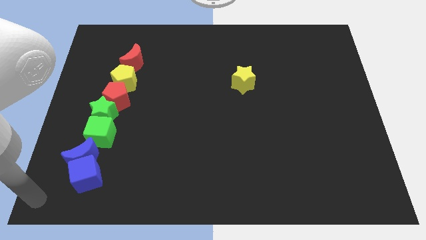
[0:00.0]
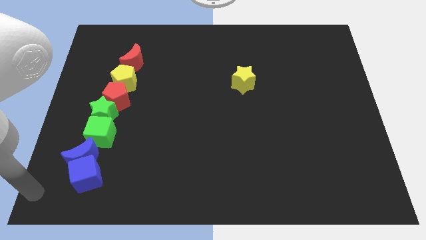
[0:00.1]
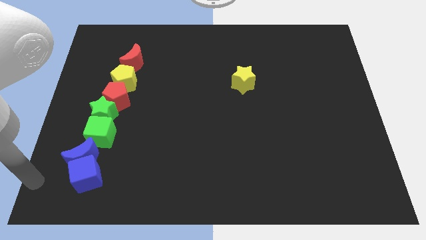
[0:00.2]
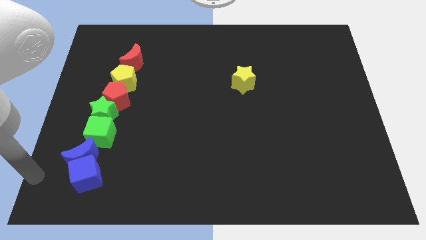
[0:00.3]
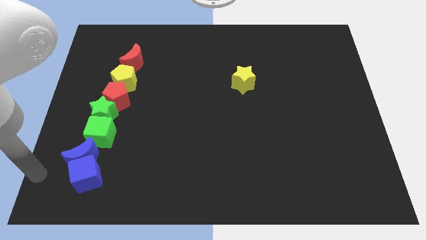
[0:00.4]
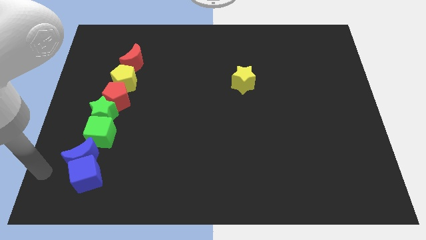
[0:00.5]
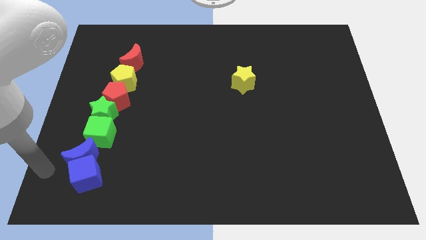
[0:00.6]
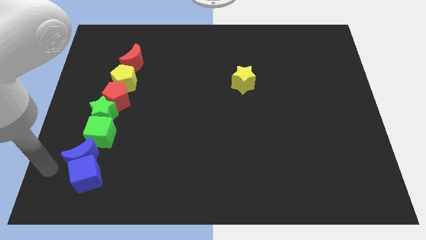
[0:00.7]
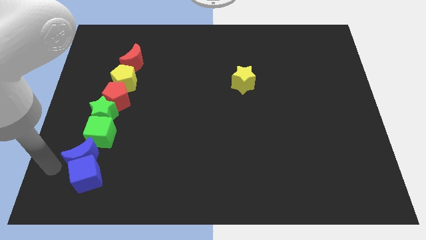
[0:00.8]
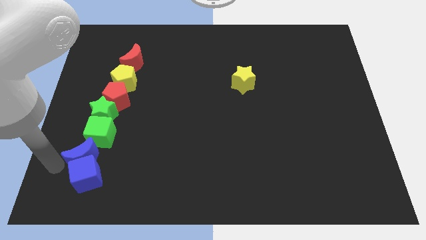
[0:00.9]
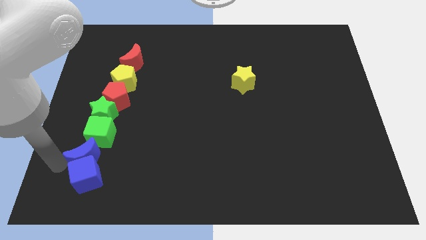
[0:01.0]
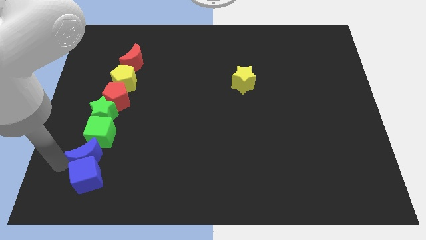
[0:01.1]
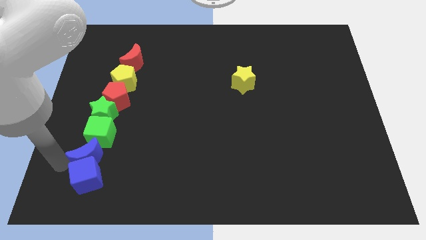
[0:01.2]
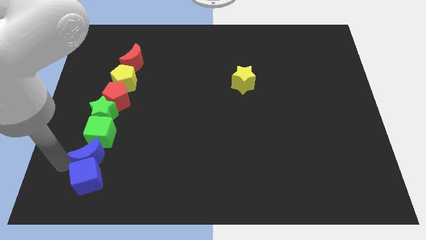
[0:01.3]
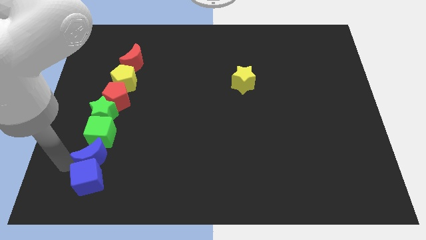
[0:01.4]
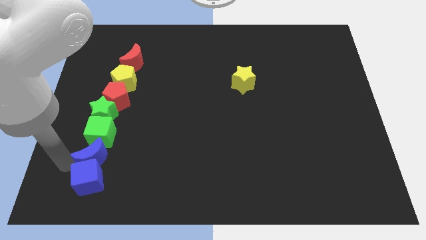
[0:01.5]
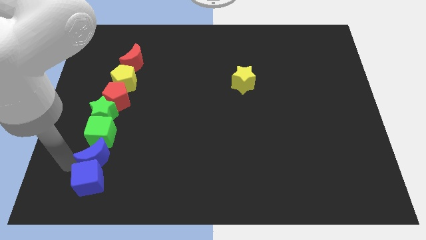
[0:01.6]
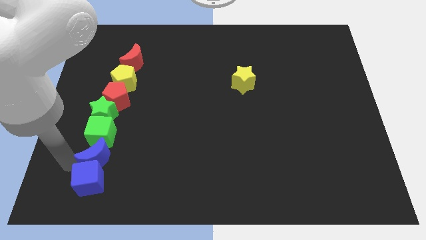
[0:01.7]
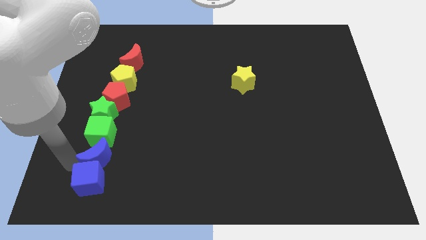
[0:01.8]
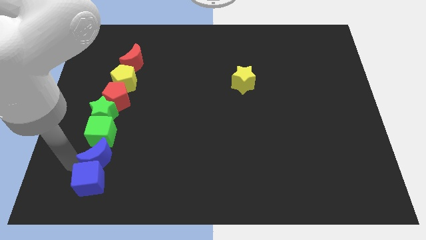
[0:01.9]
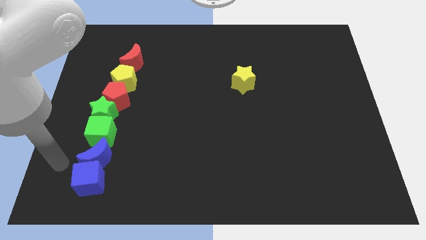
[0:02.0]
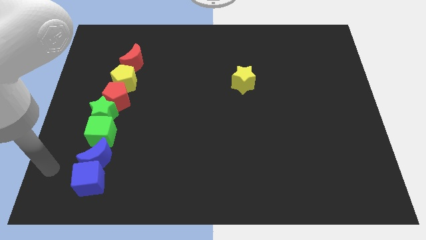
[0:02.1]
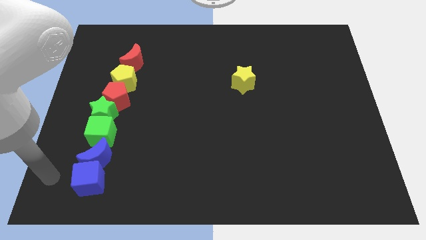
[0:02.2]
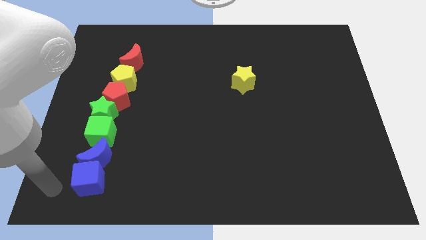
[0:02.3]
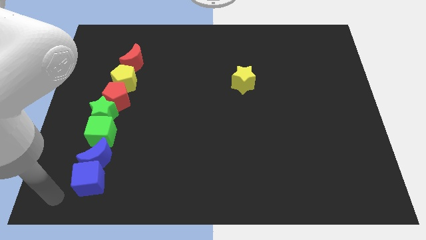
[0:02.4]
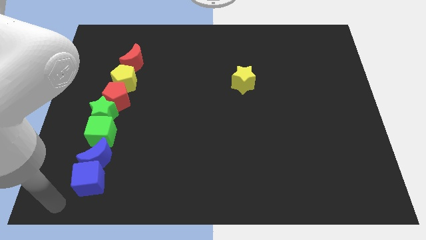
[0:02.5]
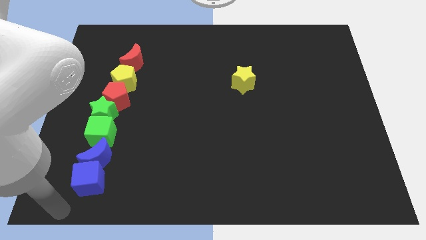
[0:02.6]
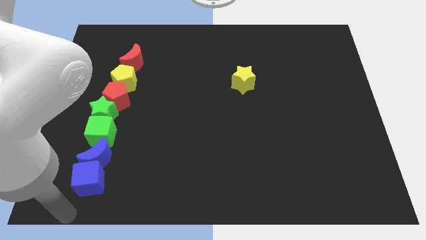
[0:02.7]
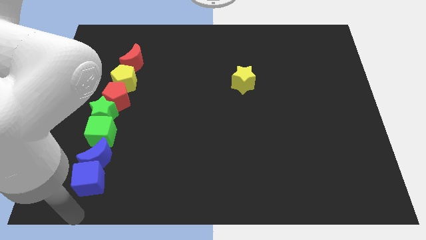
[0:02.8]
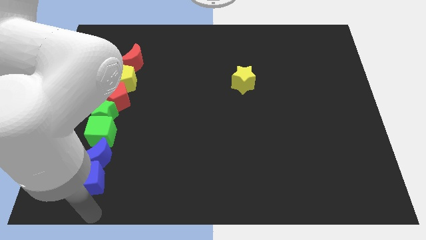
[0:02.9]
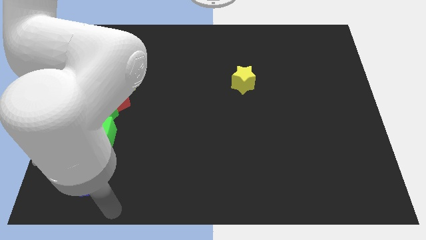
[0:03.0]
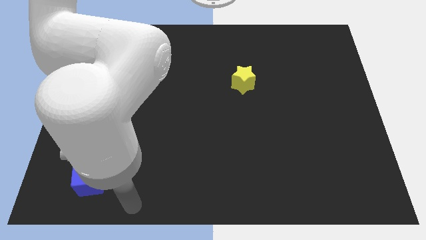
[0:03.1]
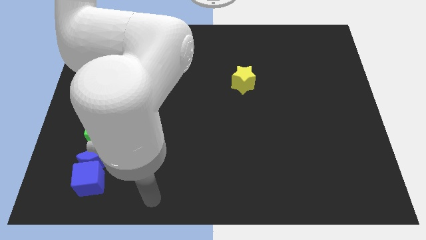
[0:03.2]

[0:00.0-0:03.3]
push the blue crescent in between the green cube and blue cube

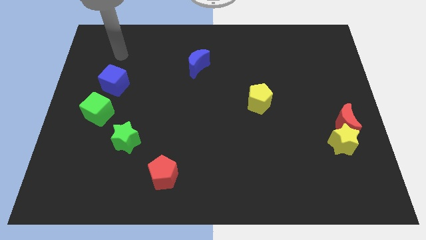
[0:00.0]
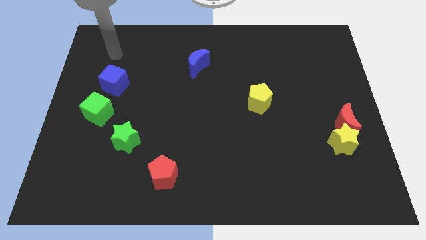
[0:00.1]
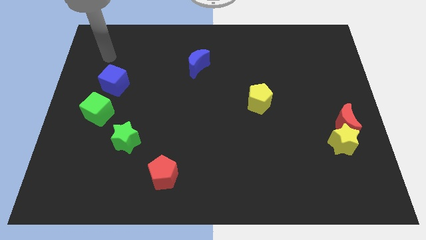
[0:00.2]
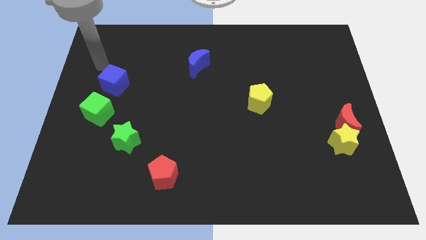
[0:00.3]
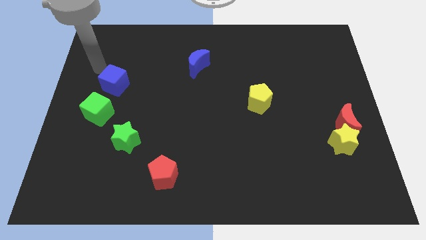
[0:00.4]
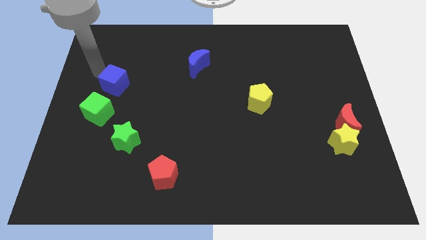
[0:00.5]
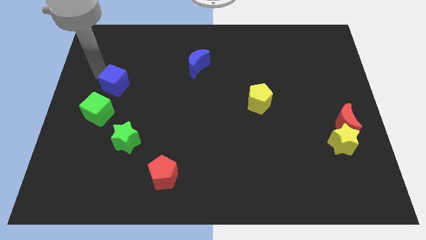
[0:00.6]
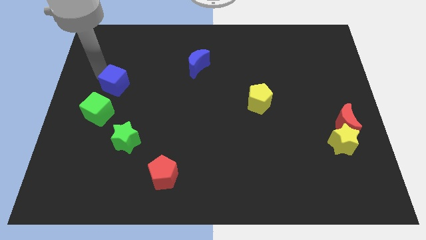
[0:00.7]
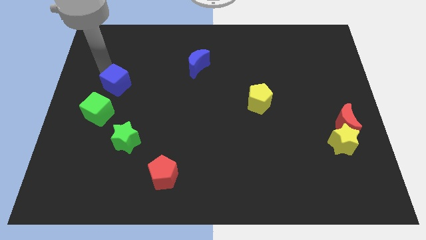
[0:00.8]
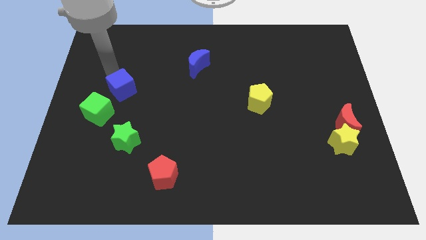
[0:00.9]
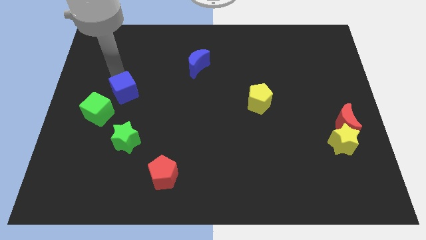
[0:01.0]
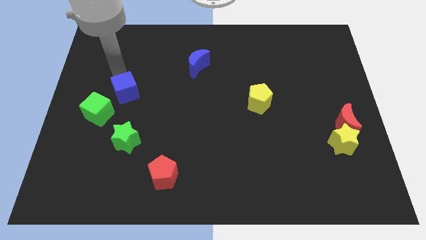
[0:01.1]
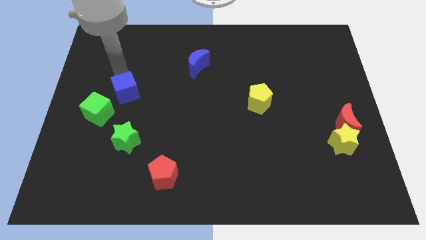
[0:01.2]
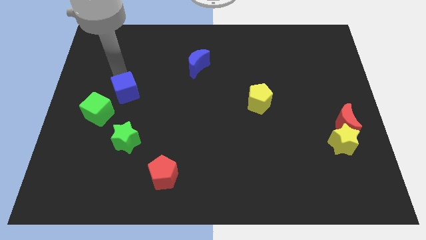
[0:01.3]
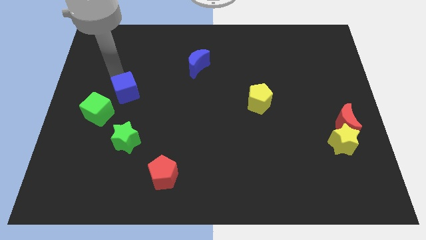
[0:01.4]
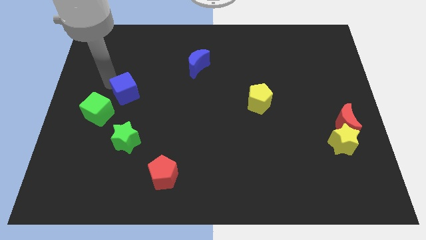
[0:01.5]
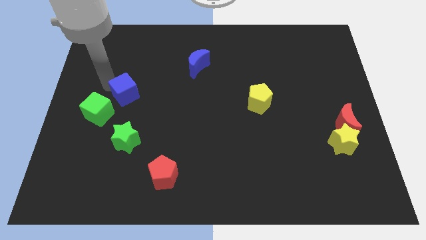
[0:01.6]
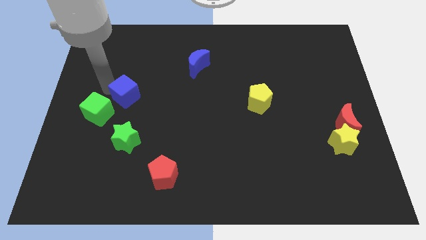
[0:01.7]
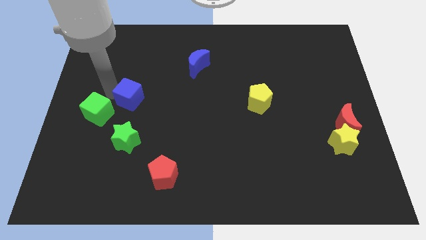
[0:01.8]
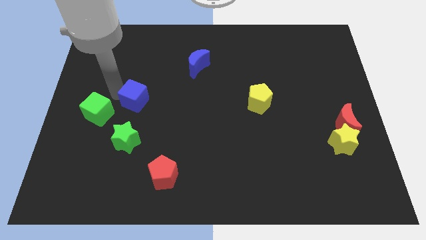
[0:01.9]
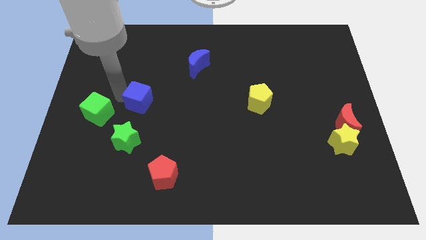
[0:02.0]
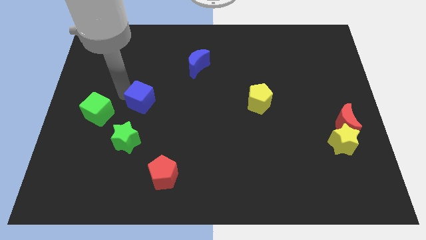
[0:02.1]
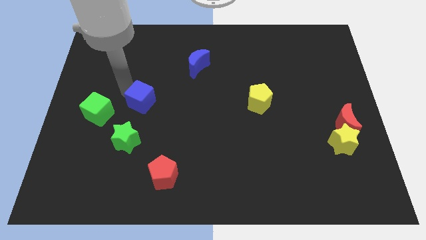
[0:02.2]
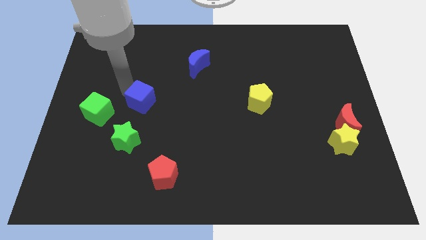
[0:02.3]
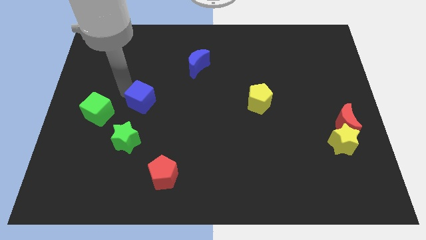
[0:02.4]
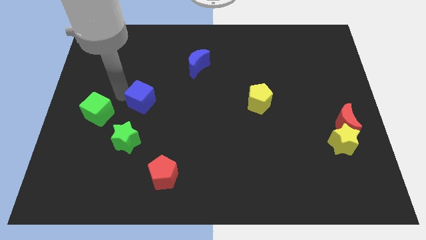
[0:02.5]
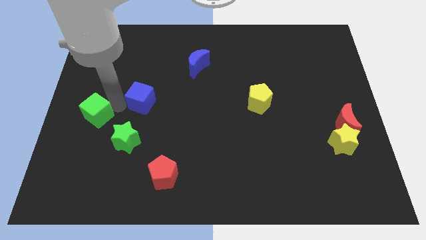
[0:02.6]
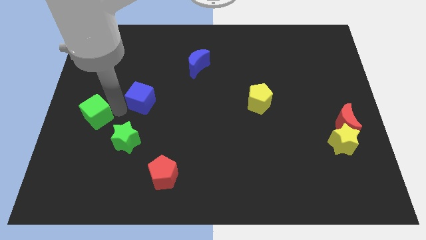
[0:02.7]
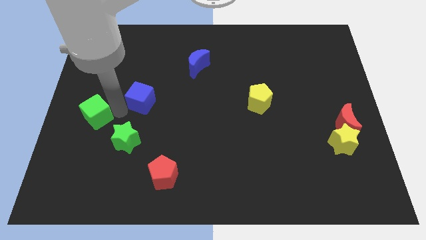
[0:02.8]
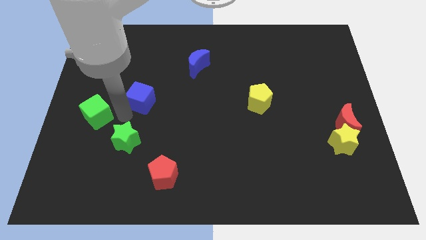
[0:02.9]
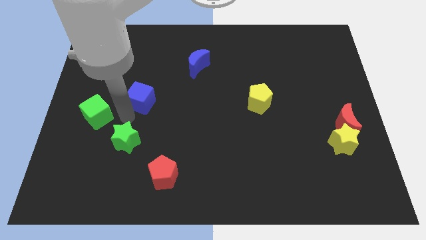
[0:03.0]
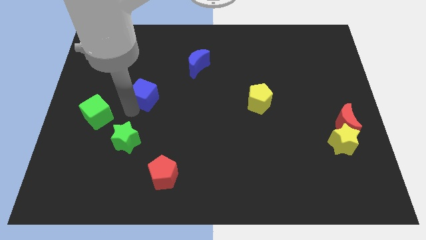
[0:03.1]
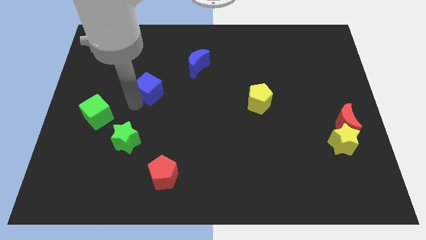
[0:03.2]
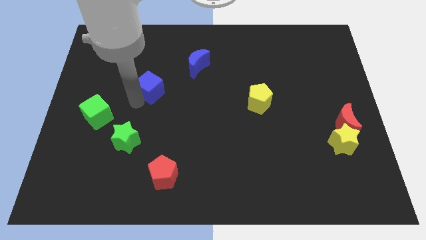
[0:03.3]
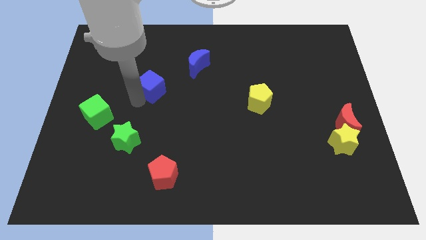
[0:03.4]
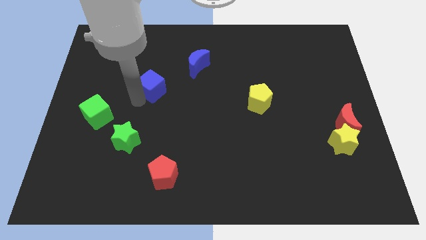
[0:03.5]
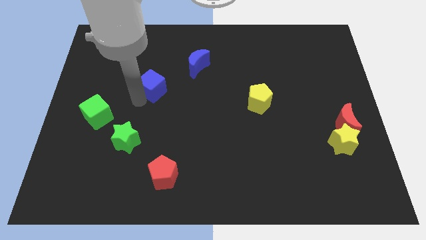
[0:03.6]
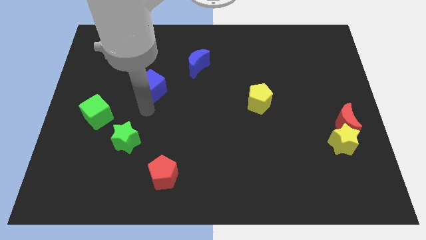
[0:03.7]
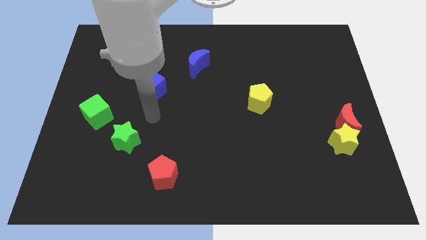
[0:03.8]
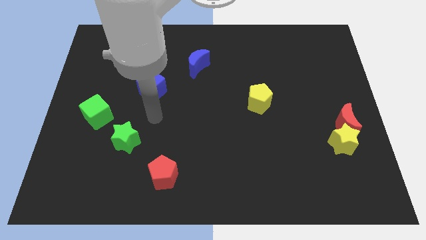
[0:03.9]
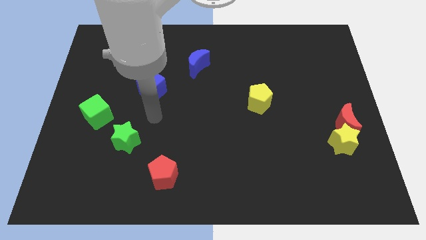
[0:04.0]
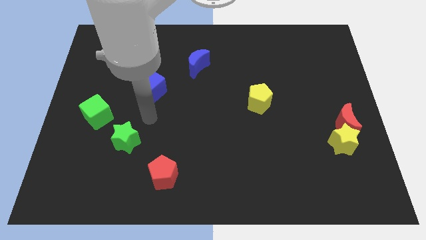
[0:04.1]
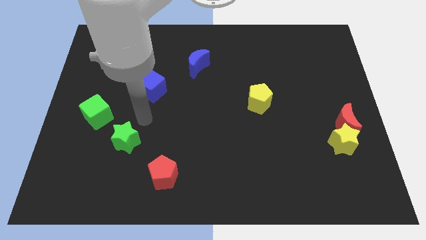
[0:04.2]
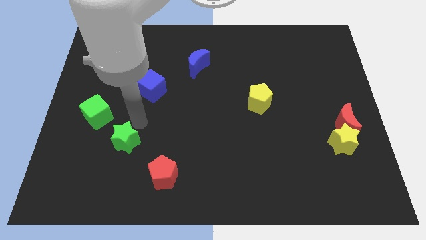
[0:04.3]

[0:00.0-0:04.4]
place blue cube to the bottom left of blue crescent

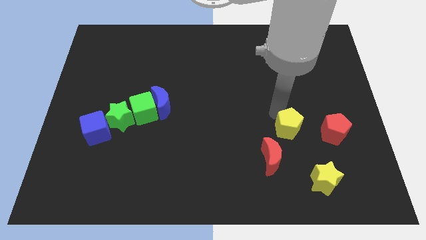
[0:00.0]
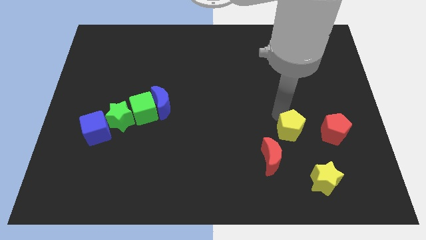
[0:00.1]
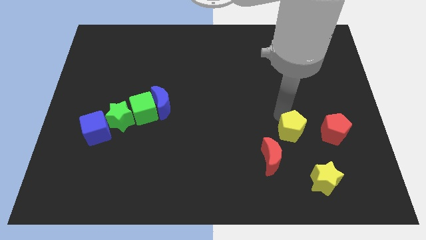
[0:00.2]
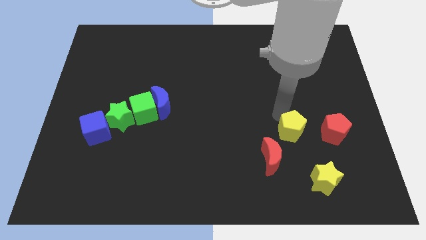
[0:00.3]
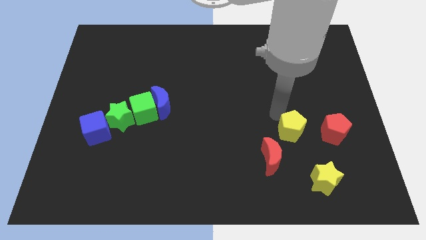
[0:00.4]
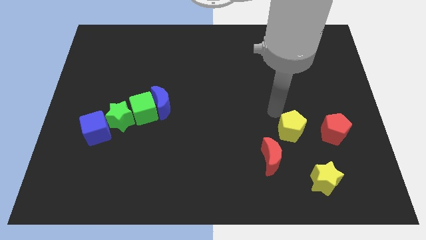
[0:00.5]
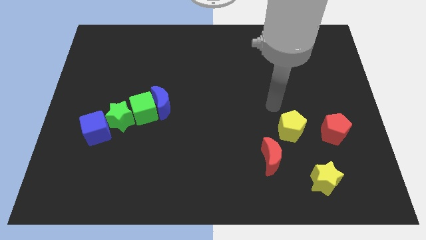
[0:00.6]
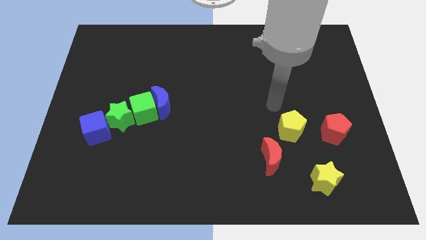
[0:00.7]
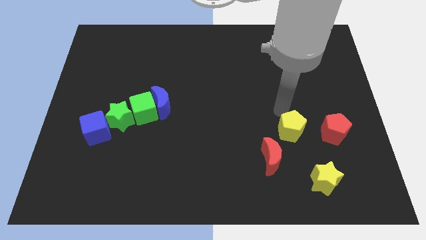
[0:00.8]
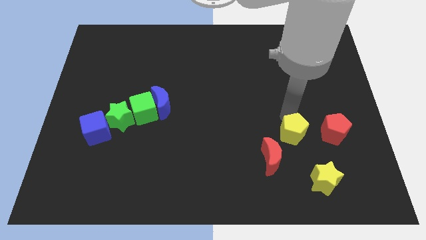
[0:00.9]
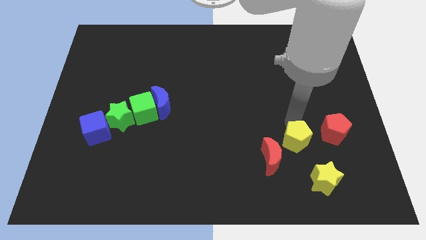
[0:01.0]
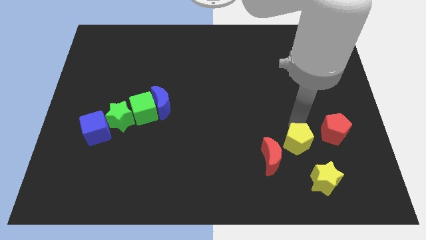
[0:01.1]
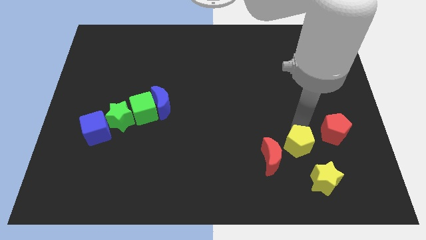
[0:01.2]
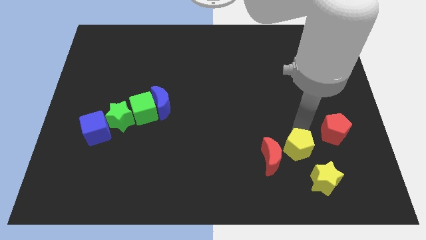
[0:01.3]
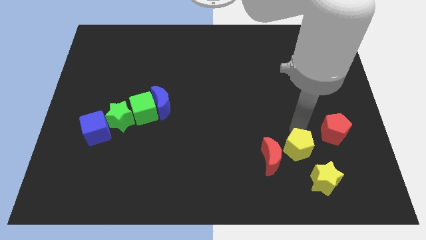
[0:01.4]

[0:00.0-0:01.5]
place the yellow pentagon in between the red crescent and red pentagon
